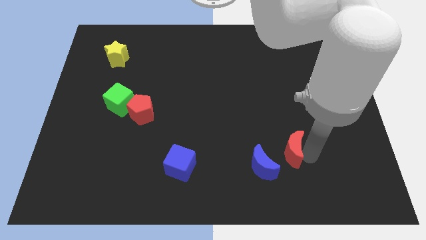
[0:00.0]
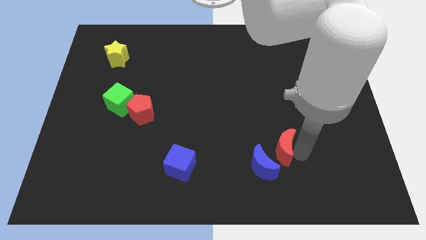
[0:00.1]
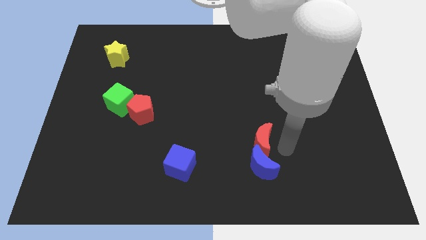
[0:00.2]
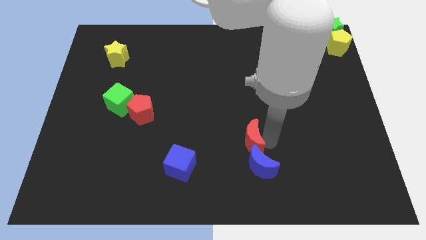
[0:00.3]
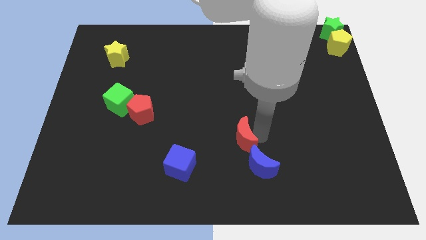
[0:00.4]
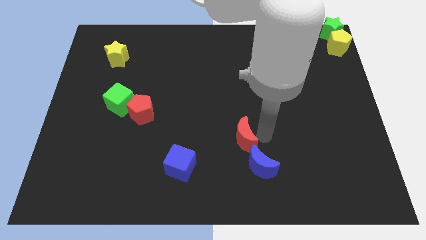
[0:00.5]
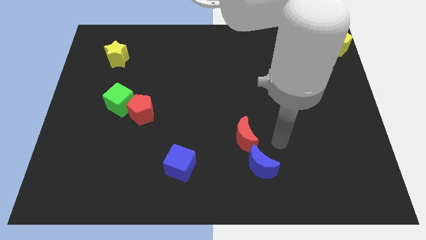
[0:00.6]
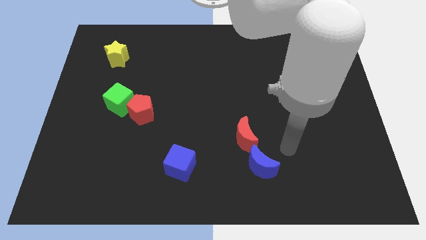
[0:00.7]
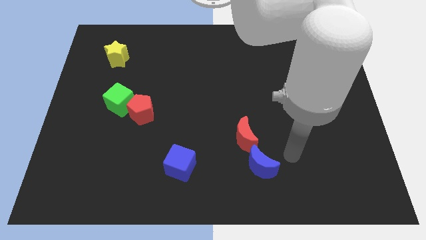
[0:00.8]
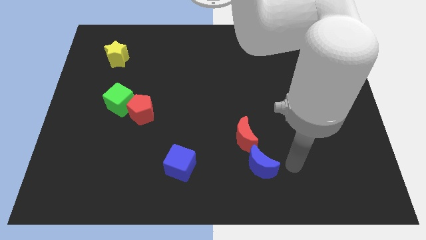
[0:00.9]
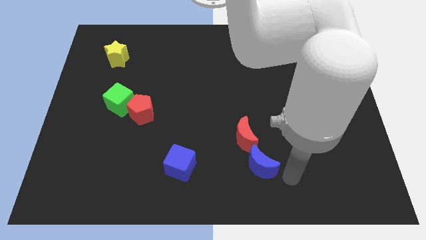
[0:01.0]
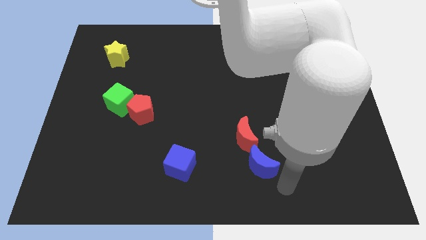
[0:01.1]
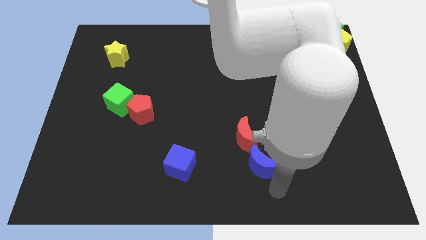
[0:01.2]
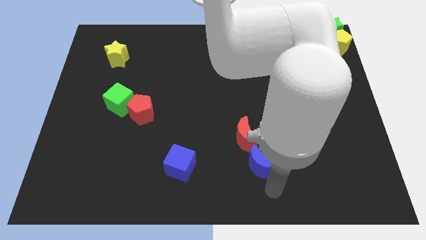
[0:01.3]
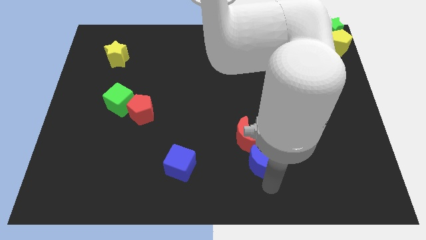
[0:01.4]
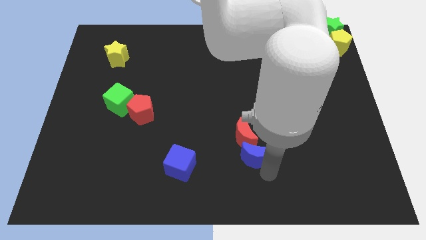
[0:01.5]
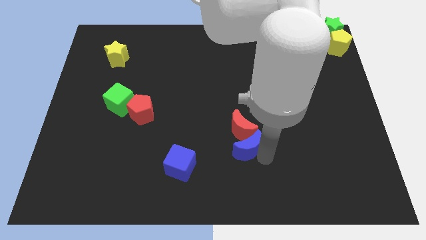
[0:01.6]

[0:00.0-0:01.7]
push both the crescents to the top center of the board

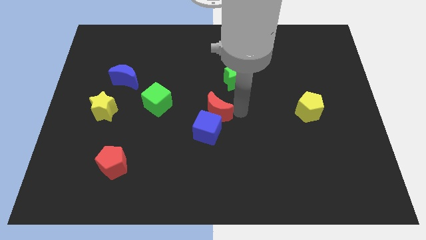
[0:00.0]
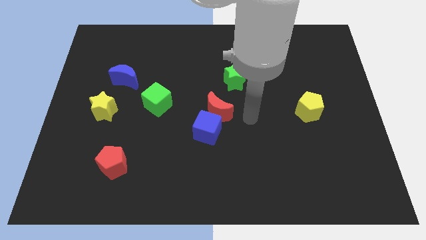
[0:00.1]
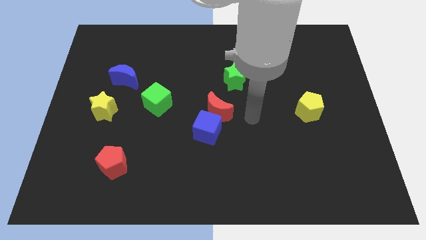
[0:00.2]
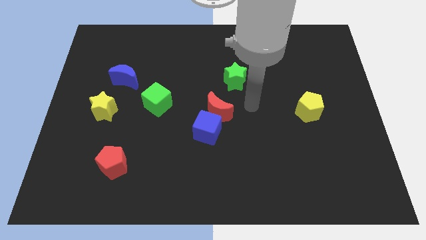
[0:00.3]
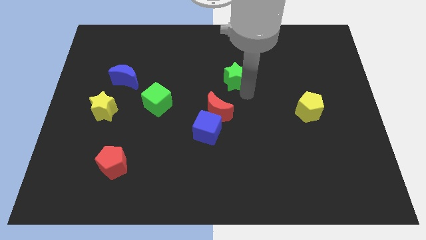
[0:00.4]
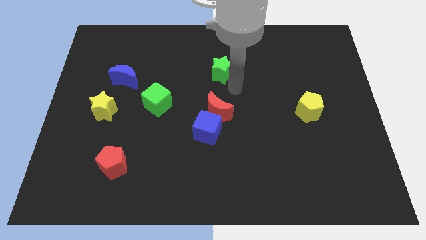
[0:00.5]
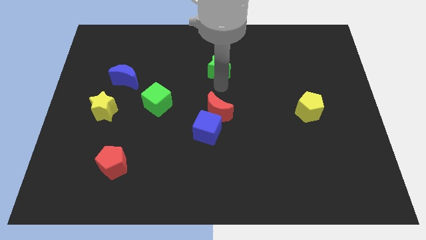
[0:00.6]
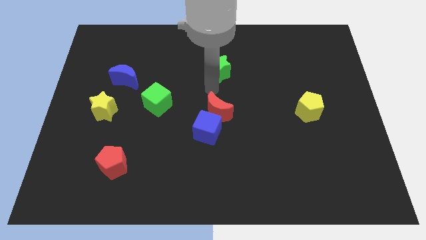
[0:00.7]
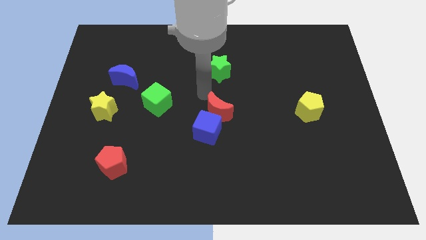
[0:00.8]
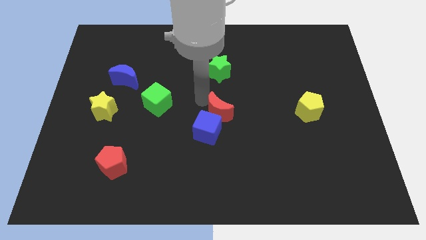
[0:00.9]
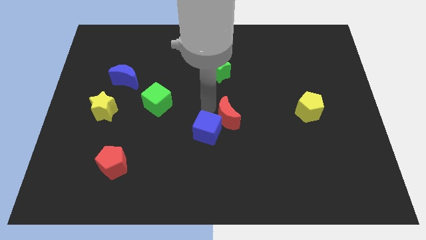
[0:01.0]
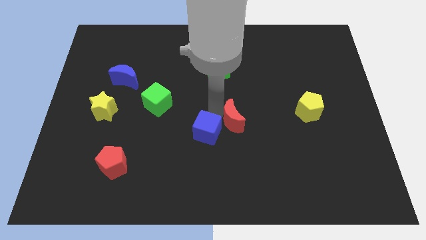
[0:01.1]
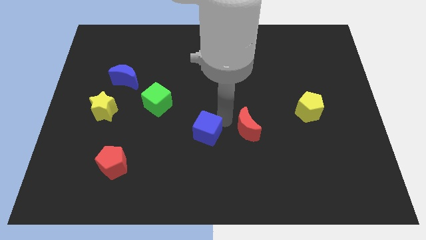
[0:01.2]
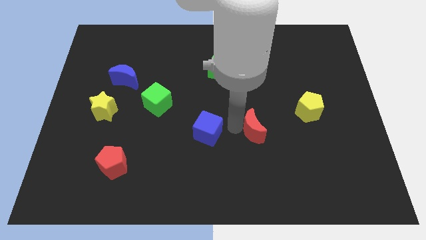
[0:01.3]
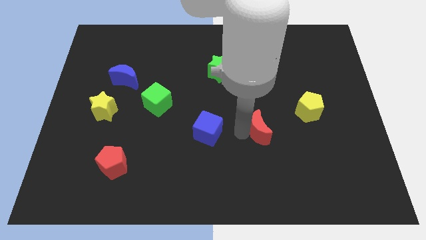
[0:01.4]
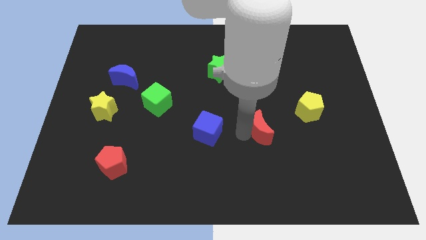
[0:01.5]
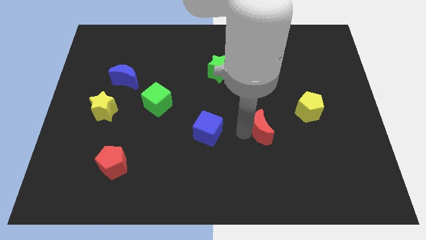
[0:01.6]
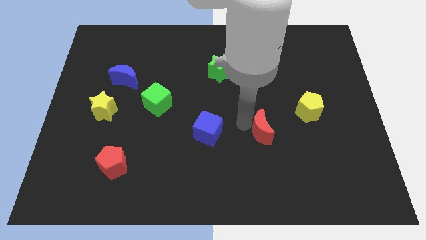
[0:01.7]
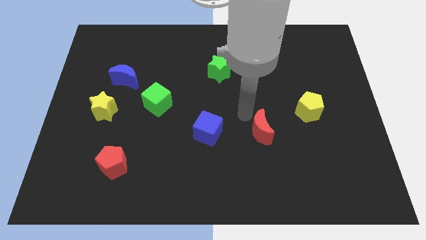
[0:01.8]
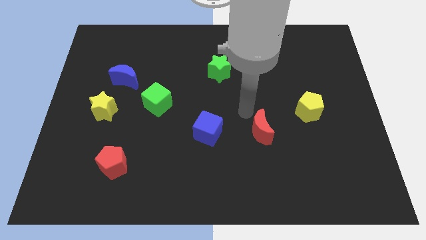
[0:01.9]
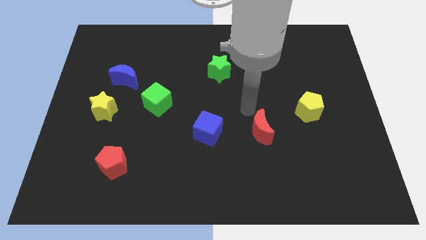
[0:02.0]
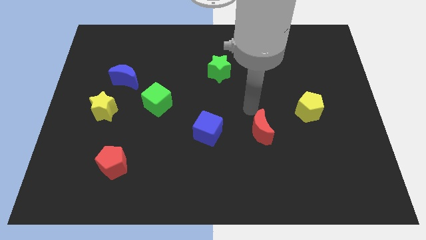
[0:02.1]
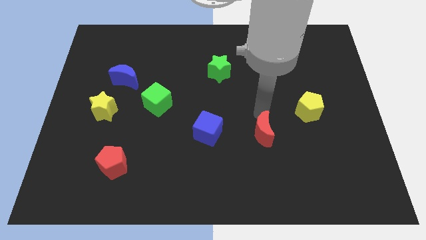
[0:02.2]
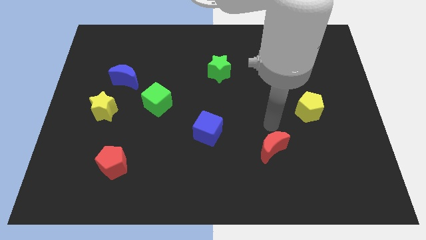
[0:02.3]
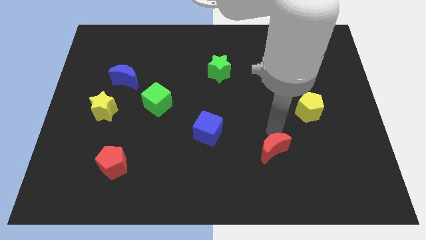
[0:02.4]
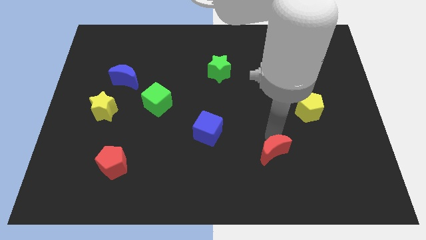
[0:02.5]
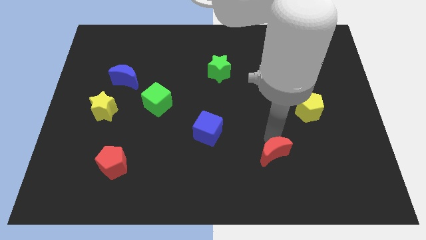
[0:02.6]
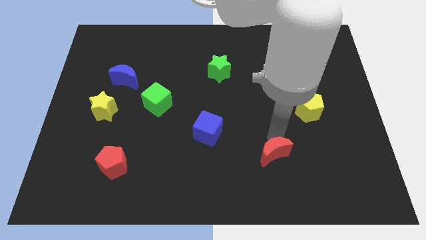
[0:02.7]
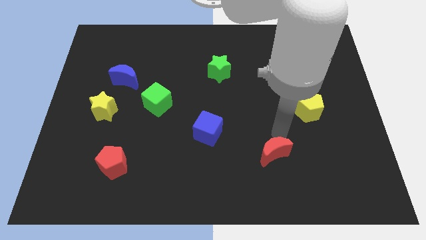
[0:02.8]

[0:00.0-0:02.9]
push the red crescent diagonal to the blue cube

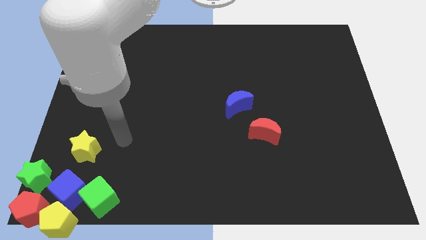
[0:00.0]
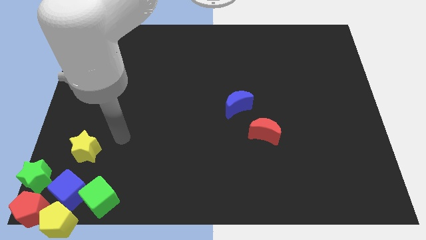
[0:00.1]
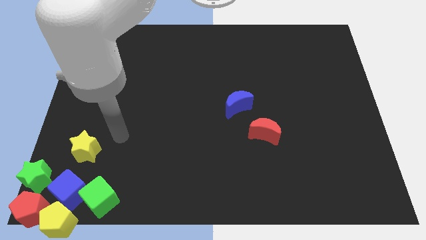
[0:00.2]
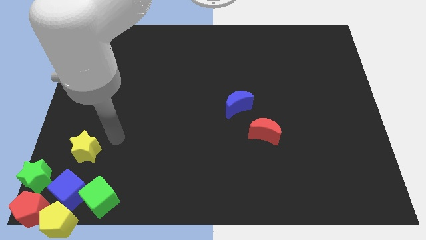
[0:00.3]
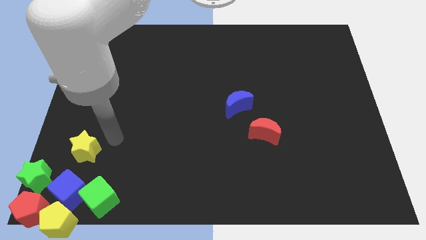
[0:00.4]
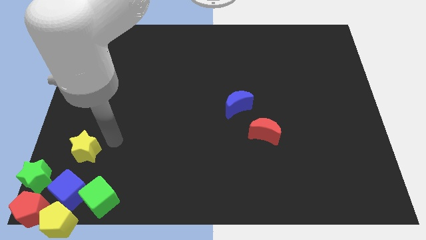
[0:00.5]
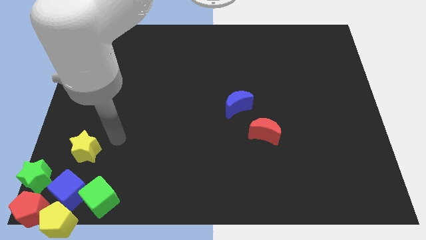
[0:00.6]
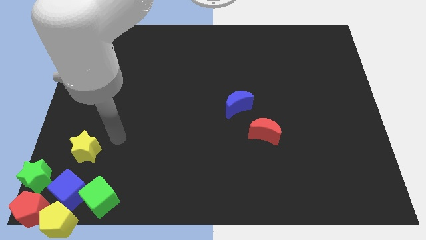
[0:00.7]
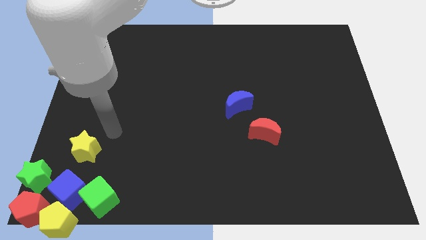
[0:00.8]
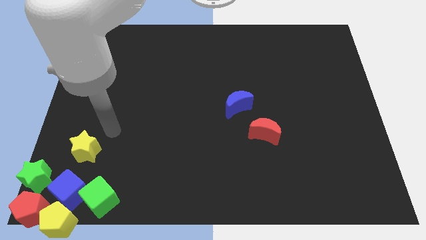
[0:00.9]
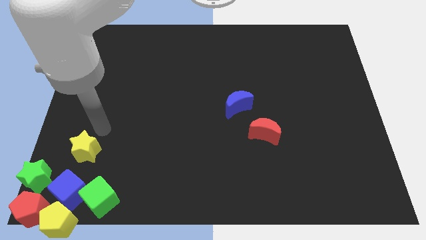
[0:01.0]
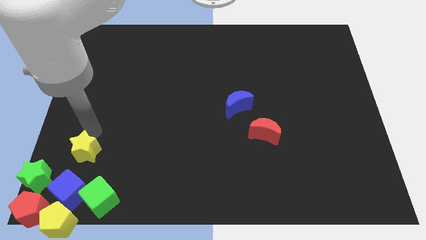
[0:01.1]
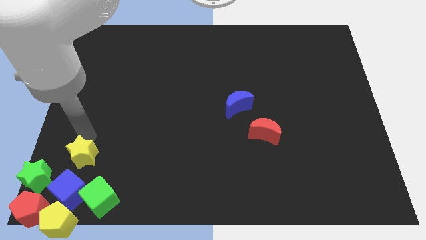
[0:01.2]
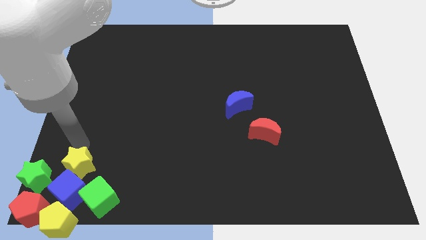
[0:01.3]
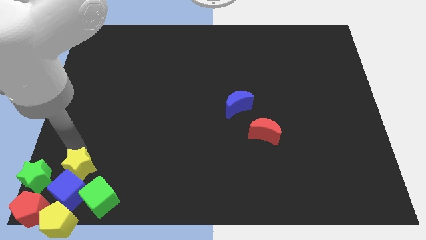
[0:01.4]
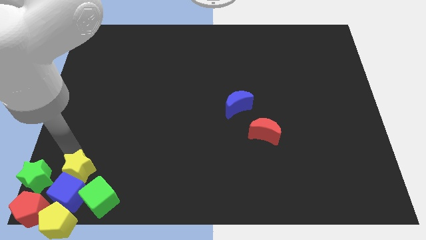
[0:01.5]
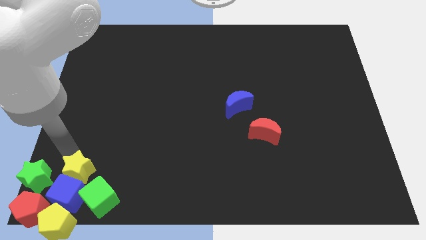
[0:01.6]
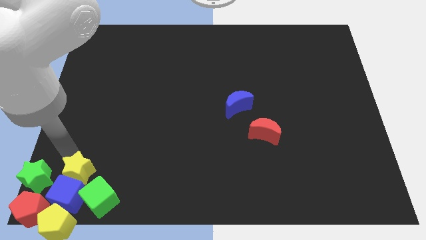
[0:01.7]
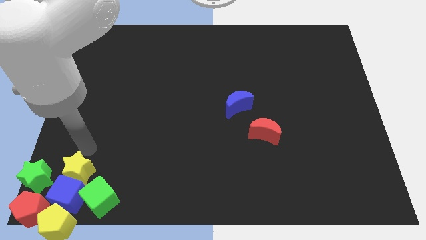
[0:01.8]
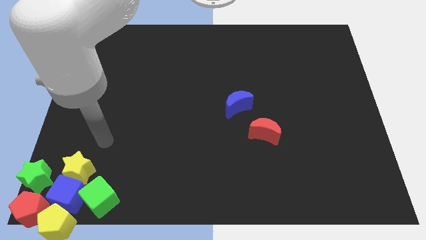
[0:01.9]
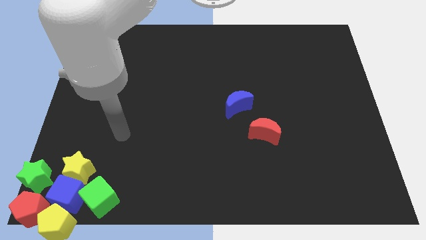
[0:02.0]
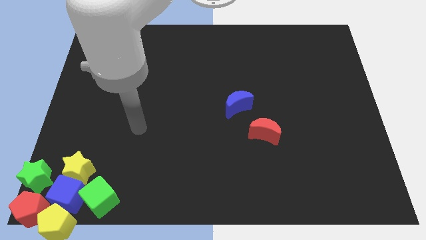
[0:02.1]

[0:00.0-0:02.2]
move the yellow star bottom left corner of the board towards blue cube

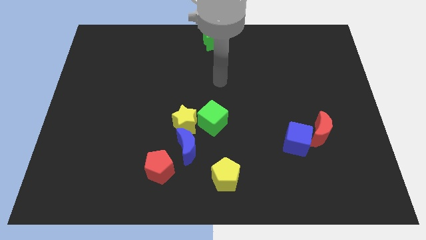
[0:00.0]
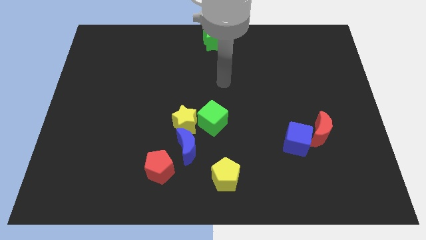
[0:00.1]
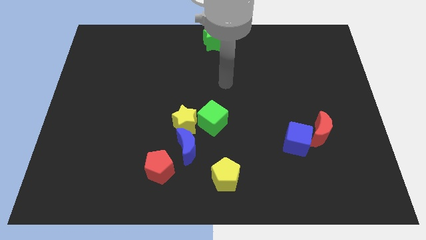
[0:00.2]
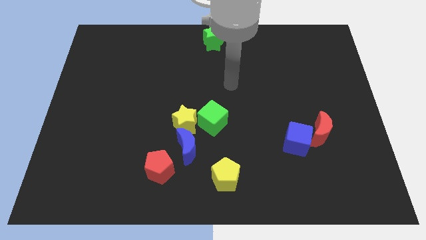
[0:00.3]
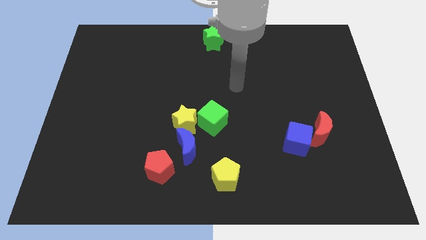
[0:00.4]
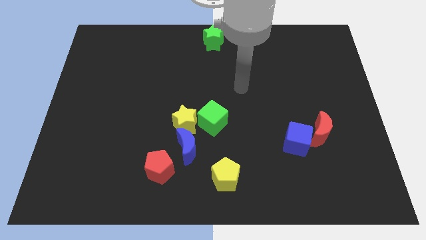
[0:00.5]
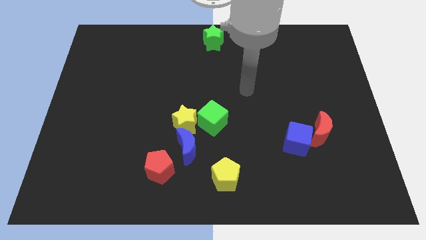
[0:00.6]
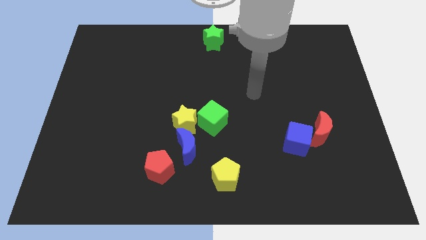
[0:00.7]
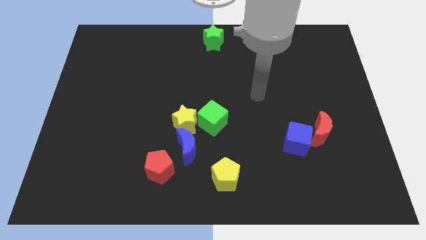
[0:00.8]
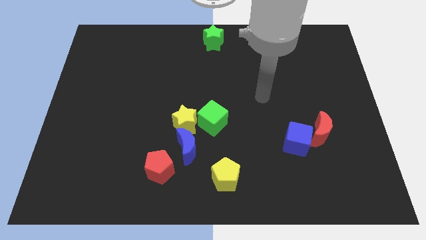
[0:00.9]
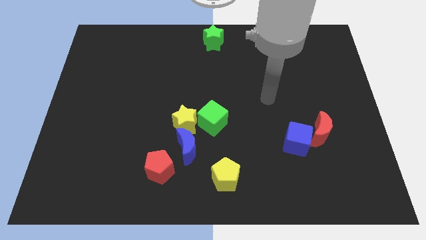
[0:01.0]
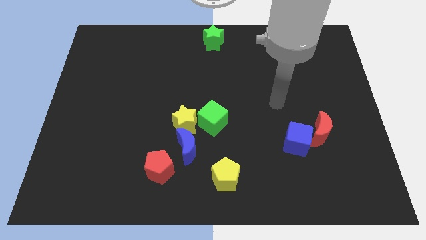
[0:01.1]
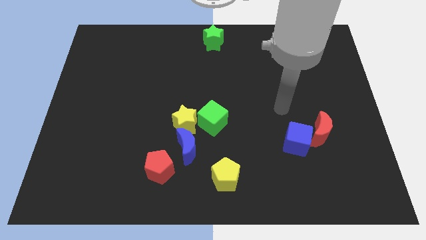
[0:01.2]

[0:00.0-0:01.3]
move the arm diagonally down

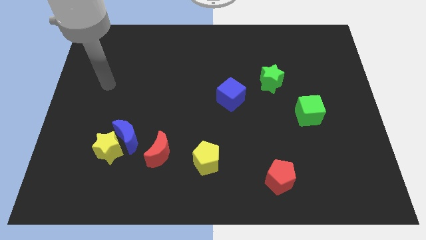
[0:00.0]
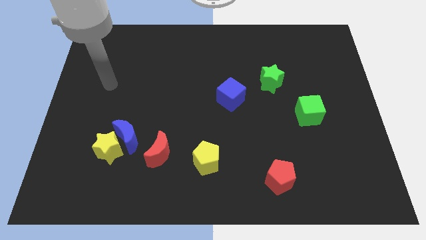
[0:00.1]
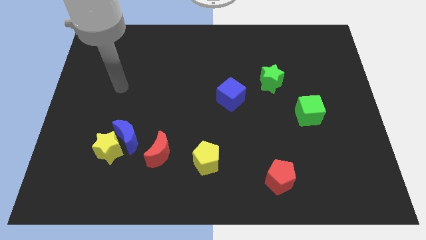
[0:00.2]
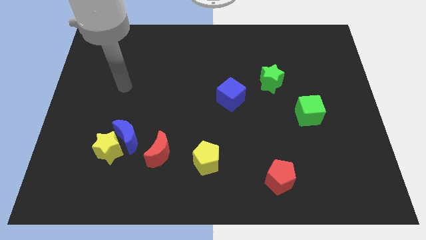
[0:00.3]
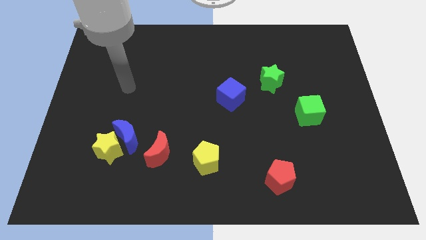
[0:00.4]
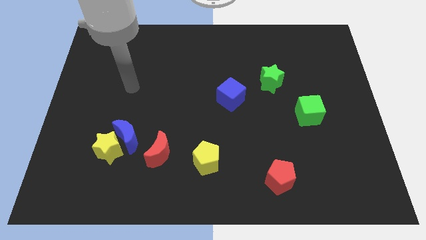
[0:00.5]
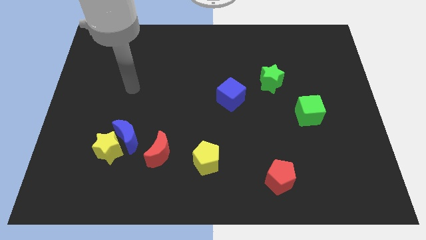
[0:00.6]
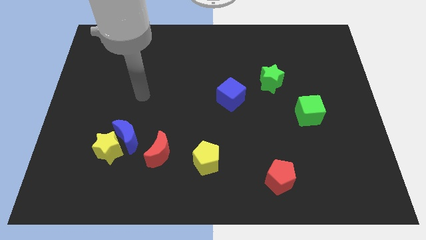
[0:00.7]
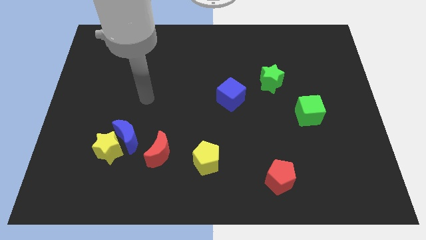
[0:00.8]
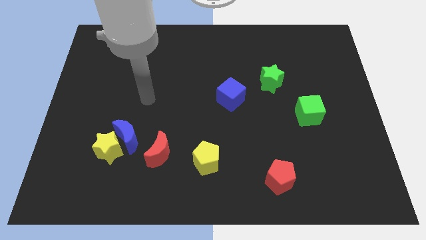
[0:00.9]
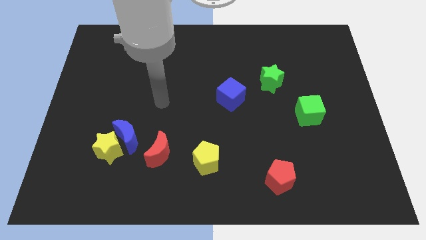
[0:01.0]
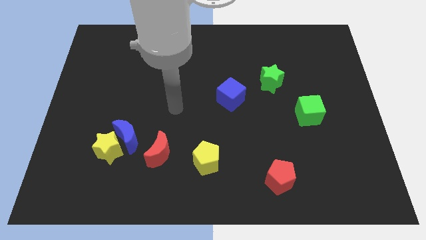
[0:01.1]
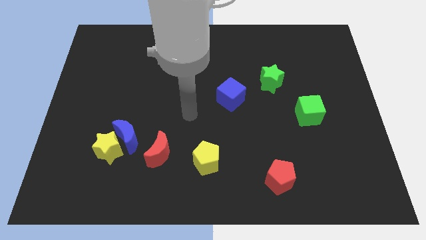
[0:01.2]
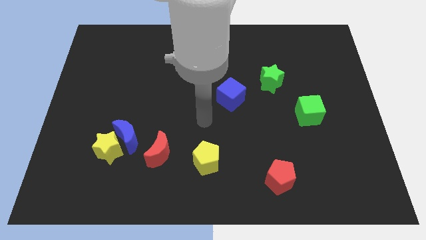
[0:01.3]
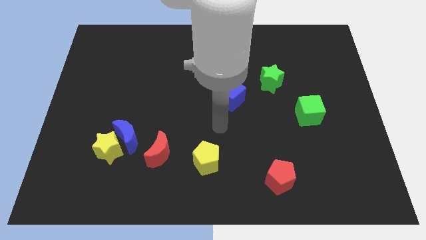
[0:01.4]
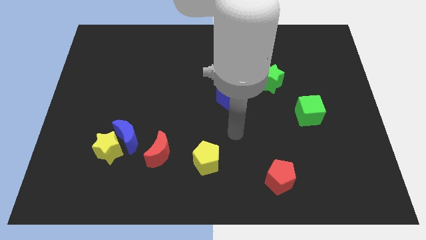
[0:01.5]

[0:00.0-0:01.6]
move your arm to the bottom side of the blue cube
